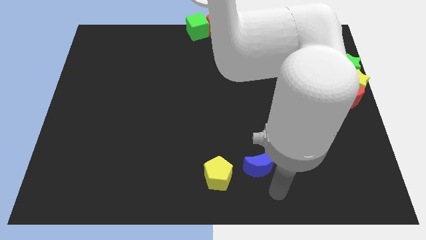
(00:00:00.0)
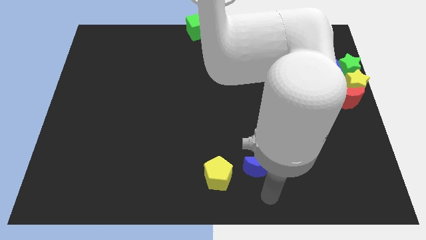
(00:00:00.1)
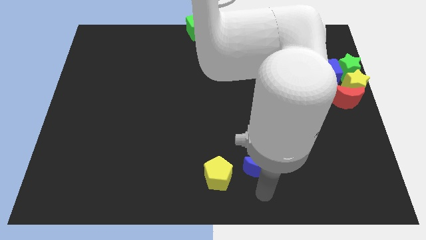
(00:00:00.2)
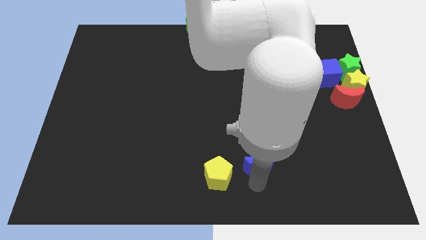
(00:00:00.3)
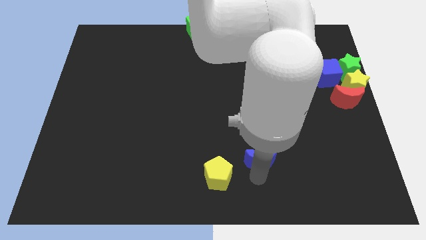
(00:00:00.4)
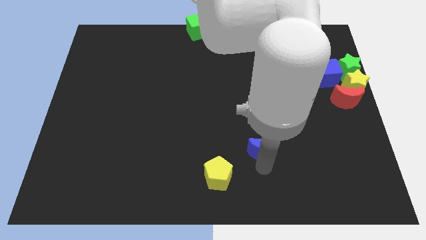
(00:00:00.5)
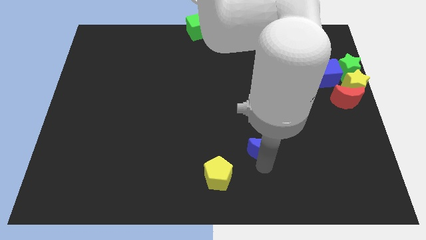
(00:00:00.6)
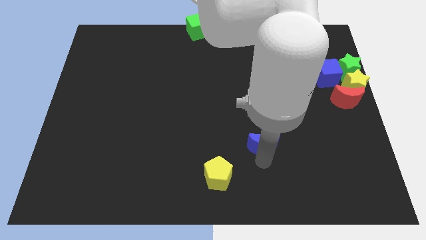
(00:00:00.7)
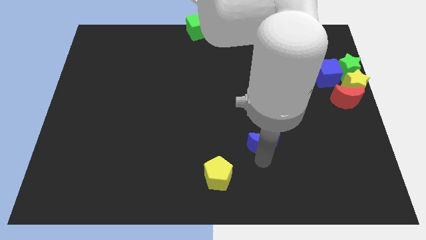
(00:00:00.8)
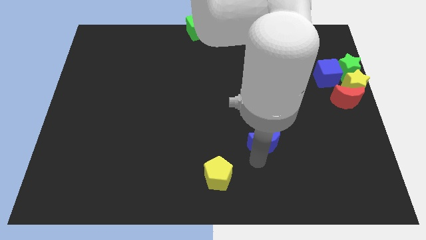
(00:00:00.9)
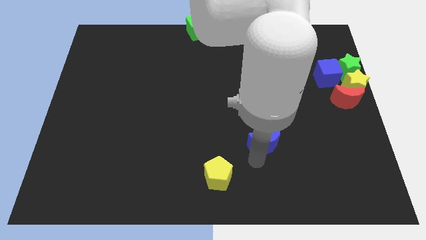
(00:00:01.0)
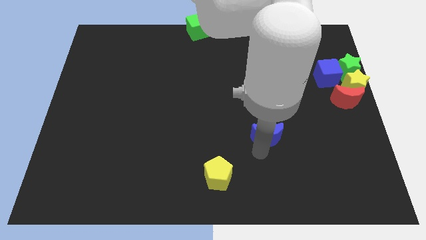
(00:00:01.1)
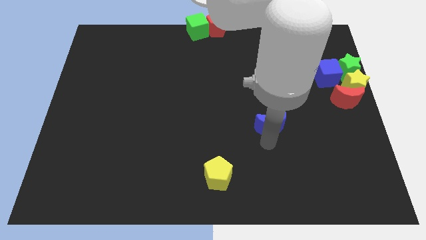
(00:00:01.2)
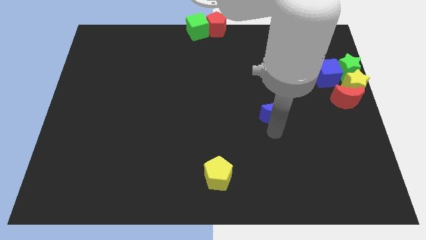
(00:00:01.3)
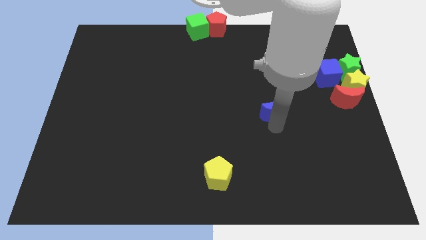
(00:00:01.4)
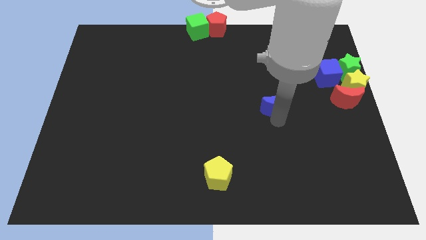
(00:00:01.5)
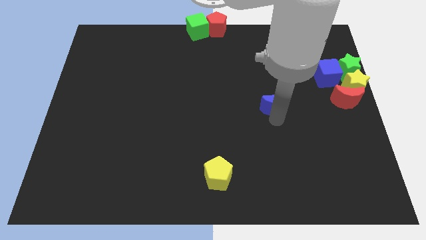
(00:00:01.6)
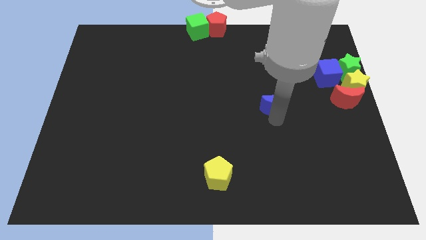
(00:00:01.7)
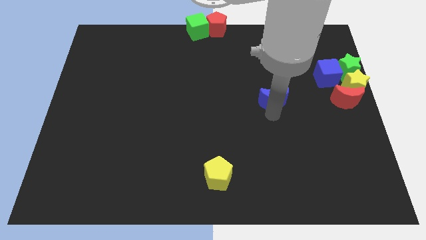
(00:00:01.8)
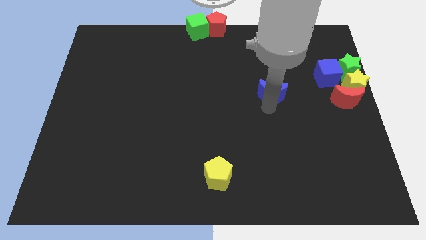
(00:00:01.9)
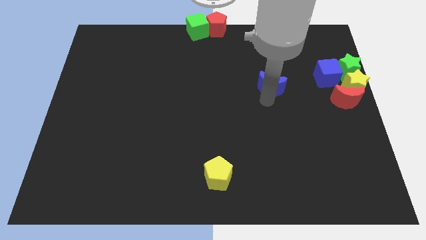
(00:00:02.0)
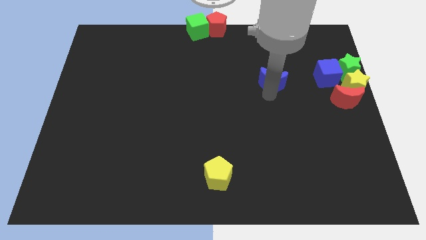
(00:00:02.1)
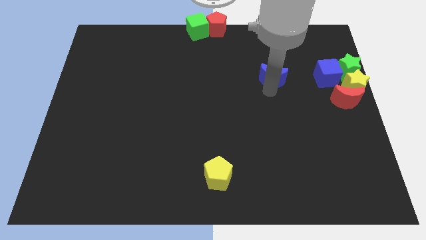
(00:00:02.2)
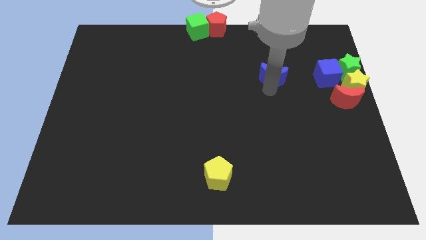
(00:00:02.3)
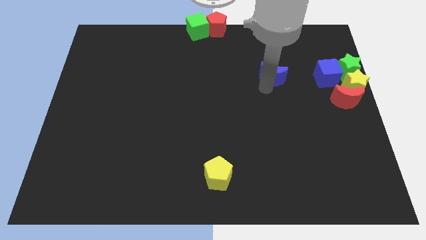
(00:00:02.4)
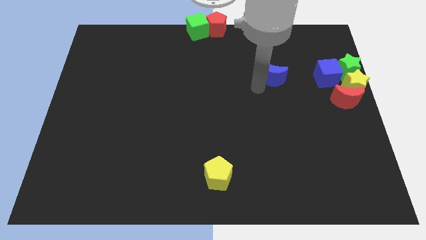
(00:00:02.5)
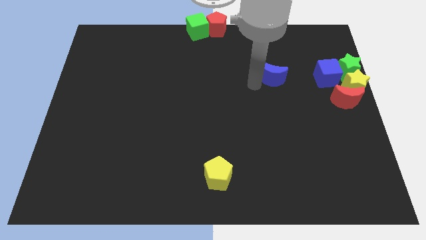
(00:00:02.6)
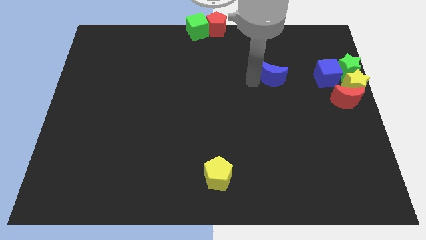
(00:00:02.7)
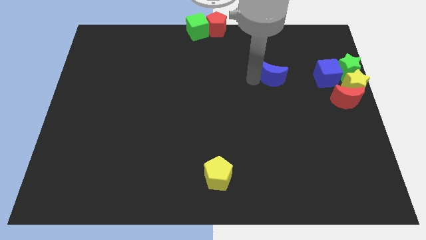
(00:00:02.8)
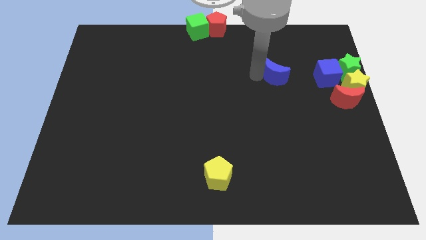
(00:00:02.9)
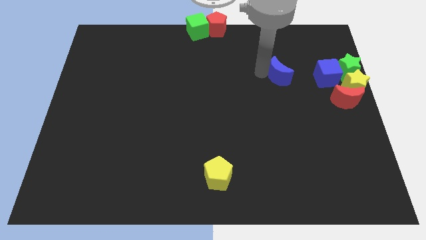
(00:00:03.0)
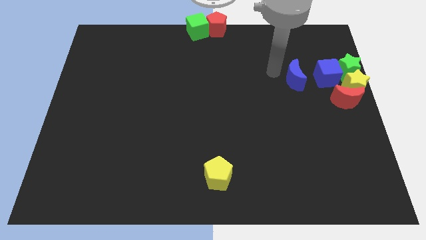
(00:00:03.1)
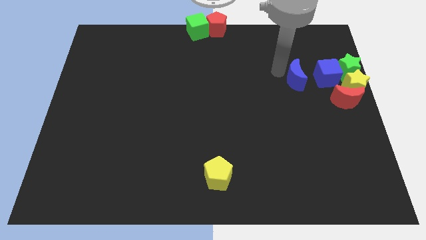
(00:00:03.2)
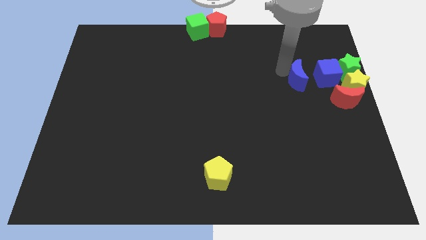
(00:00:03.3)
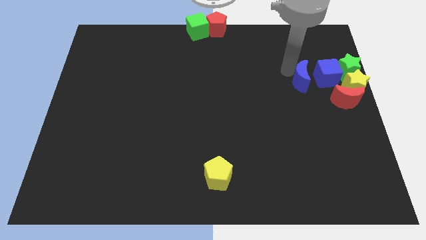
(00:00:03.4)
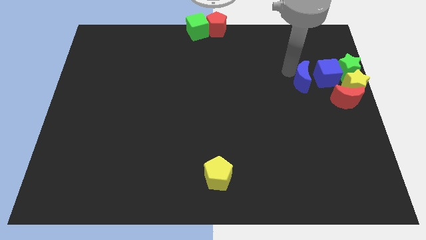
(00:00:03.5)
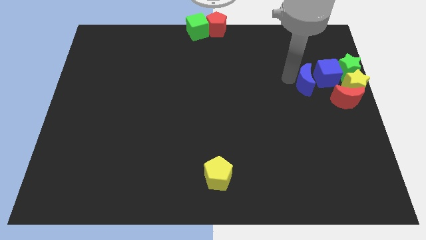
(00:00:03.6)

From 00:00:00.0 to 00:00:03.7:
push blue moon into group of blocks

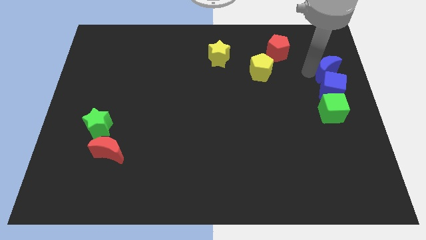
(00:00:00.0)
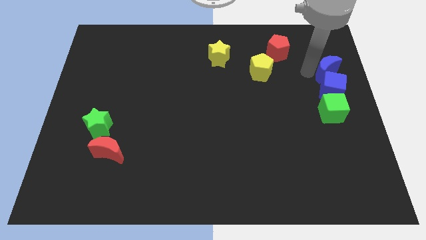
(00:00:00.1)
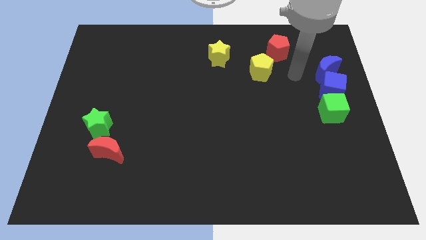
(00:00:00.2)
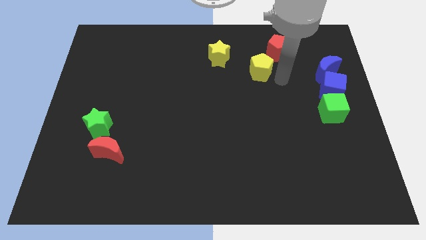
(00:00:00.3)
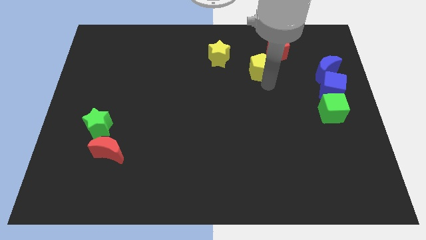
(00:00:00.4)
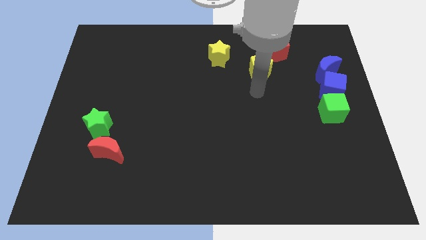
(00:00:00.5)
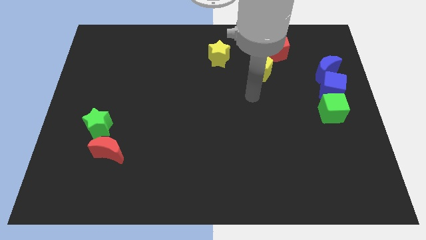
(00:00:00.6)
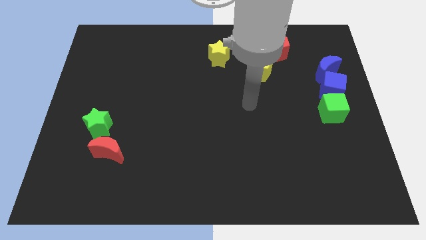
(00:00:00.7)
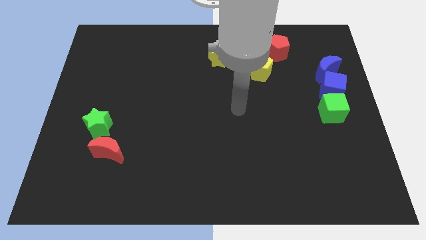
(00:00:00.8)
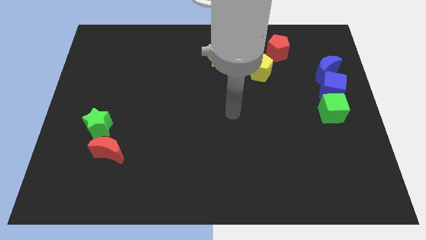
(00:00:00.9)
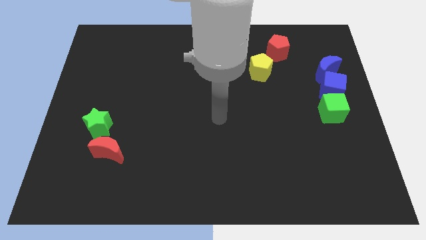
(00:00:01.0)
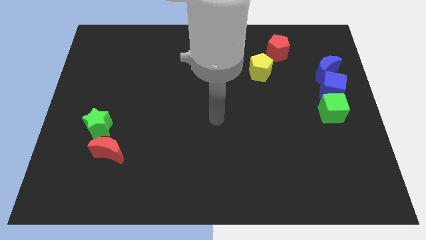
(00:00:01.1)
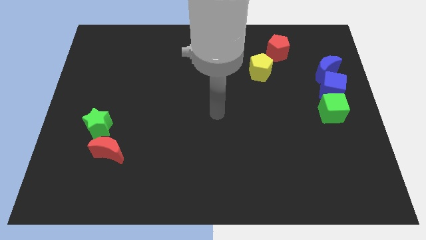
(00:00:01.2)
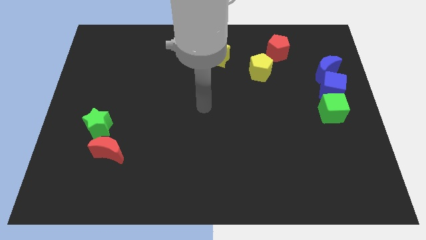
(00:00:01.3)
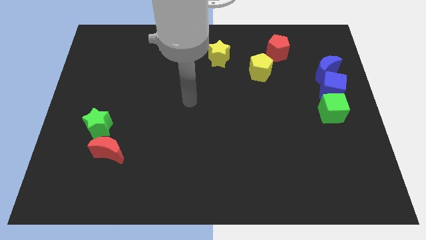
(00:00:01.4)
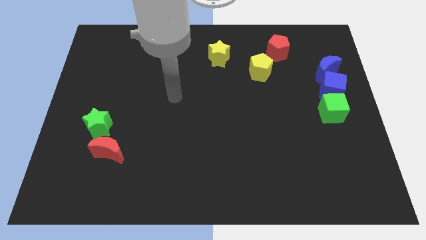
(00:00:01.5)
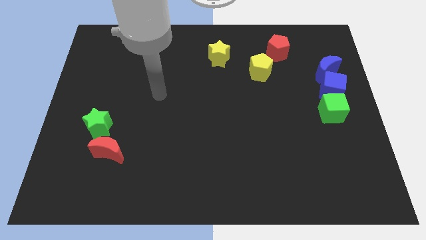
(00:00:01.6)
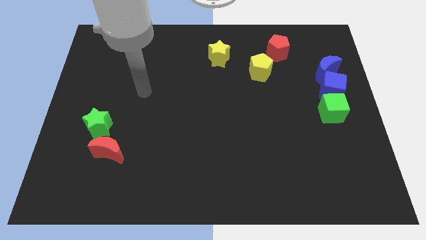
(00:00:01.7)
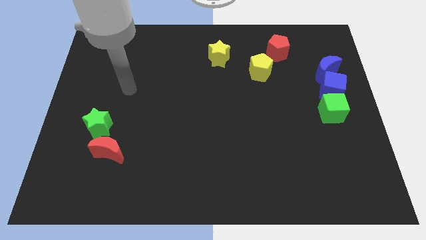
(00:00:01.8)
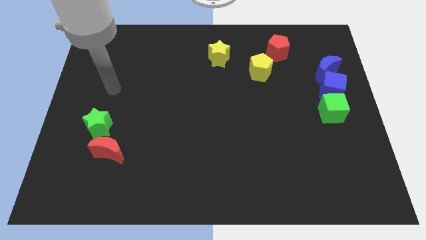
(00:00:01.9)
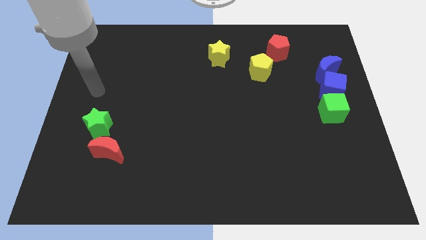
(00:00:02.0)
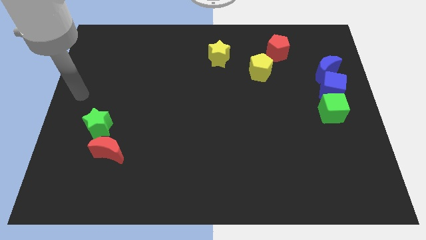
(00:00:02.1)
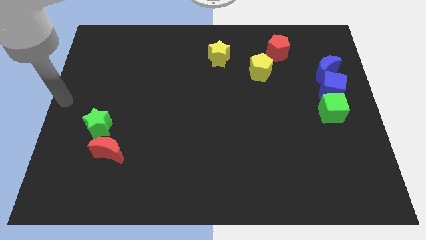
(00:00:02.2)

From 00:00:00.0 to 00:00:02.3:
move your arm away from the blue moon

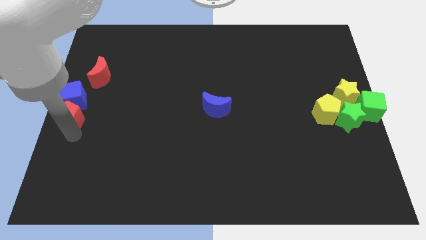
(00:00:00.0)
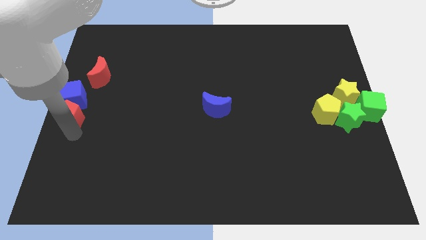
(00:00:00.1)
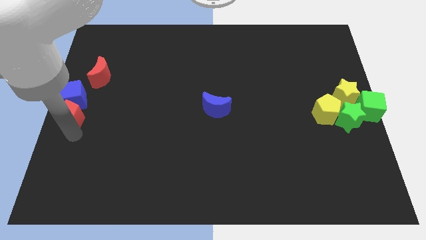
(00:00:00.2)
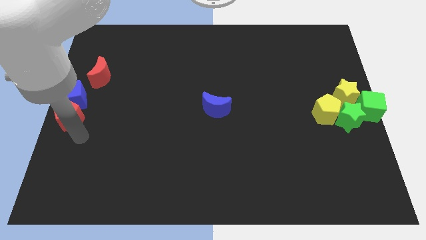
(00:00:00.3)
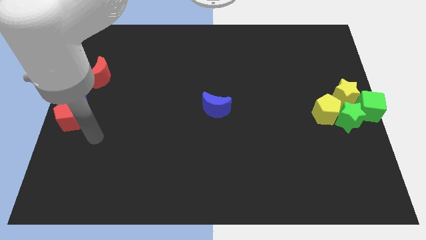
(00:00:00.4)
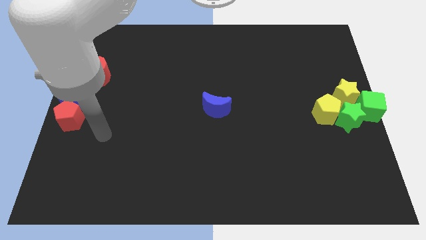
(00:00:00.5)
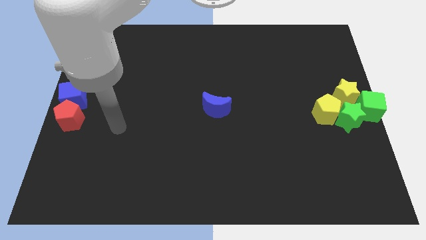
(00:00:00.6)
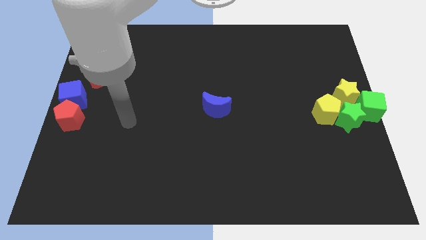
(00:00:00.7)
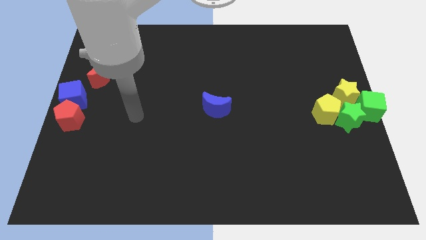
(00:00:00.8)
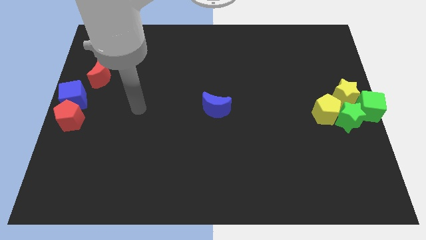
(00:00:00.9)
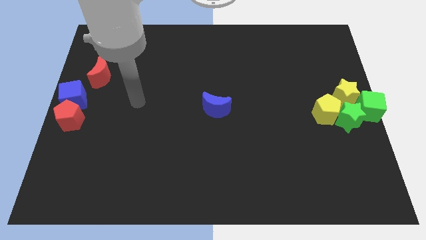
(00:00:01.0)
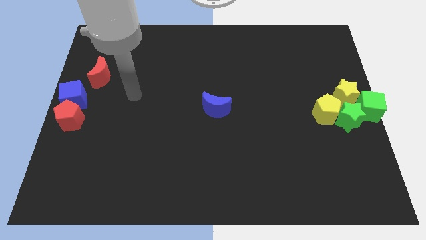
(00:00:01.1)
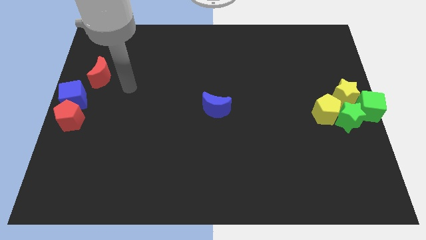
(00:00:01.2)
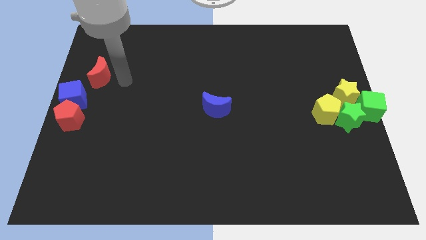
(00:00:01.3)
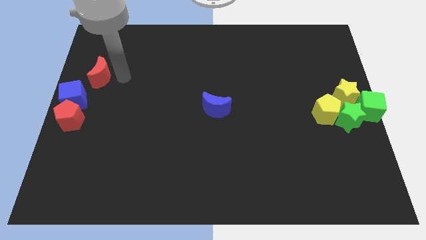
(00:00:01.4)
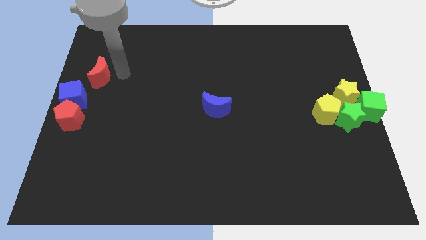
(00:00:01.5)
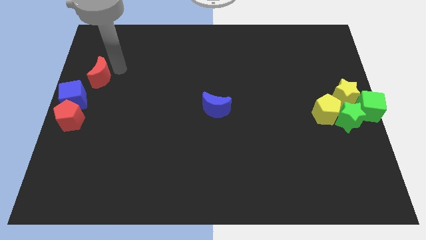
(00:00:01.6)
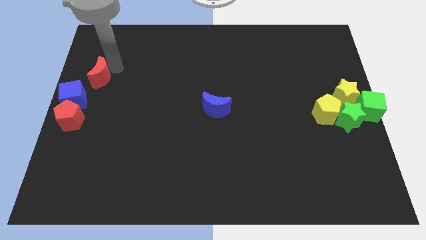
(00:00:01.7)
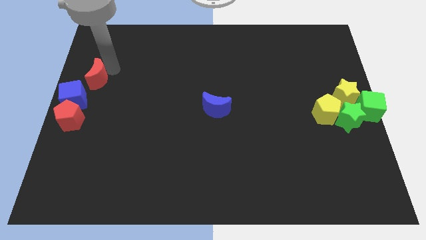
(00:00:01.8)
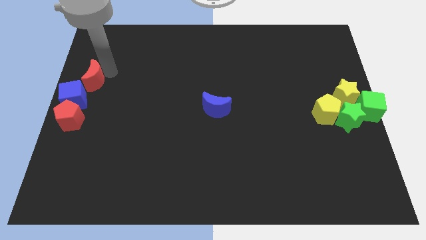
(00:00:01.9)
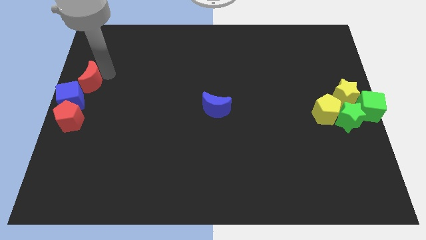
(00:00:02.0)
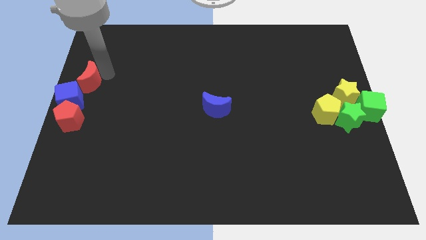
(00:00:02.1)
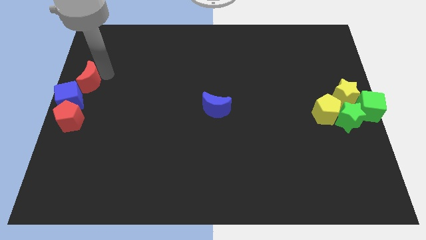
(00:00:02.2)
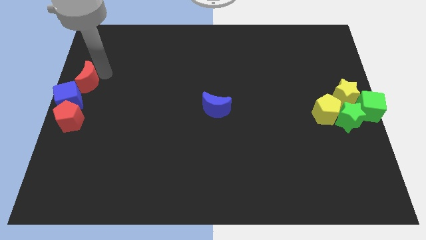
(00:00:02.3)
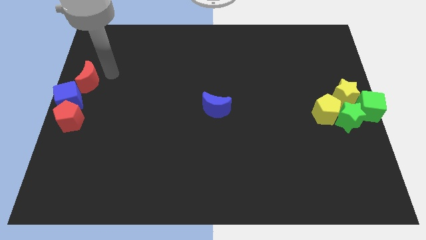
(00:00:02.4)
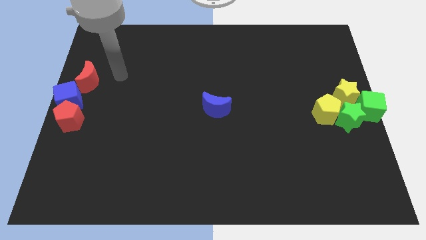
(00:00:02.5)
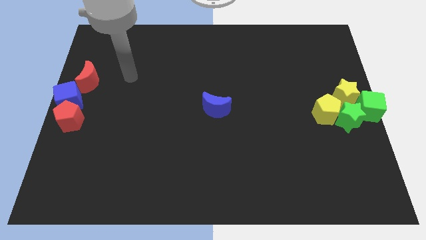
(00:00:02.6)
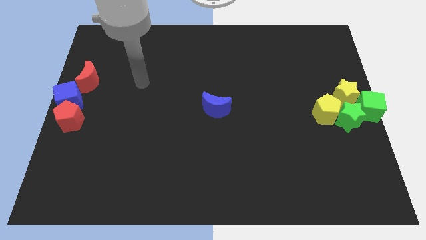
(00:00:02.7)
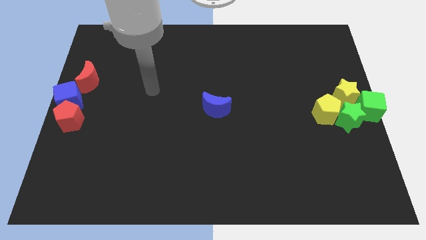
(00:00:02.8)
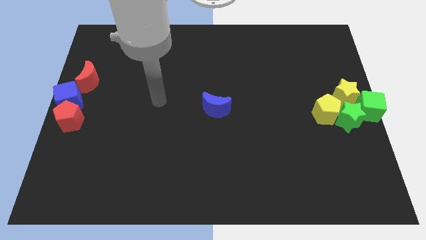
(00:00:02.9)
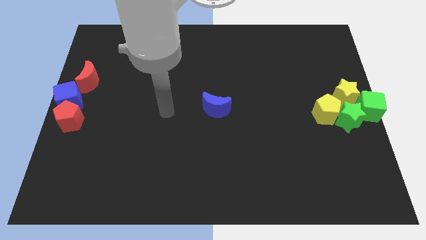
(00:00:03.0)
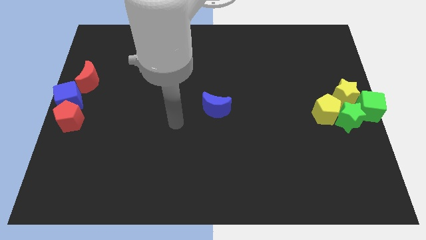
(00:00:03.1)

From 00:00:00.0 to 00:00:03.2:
push the red crescent into the blue cube
